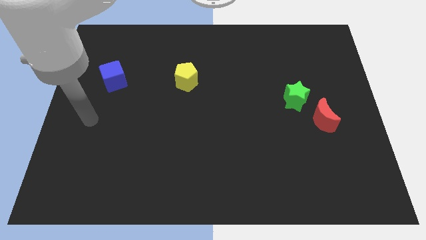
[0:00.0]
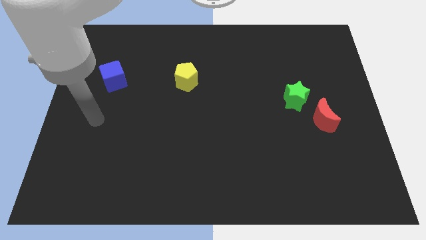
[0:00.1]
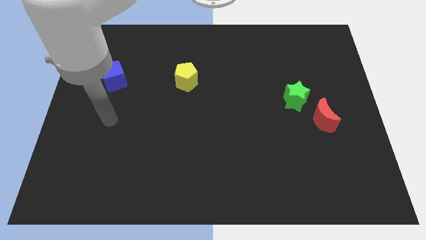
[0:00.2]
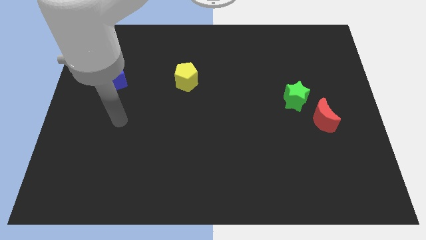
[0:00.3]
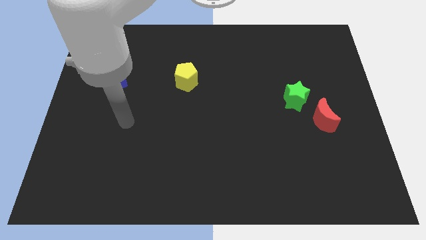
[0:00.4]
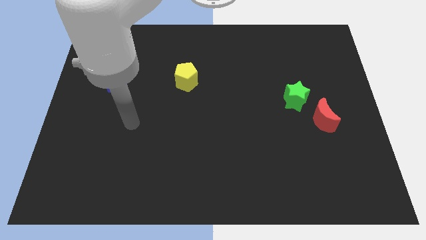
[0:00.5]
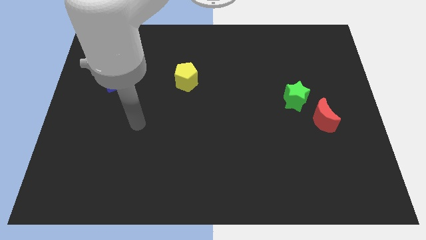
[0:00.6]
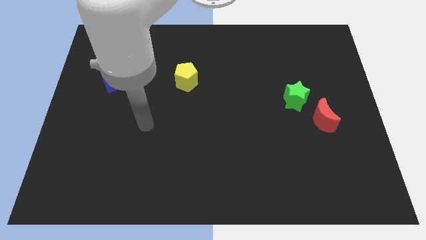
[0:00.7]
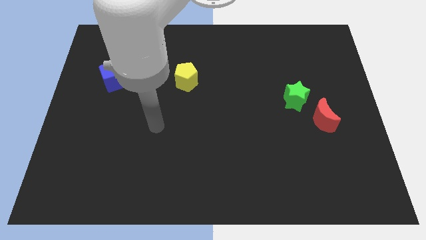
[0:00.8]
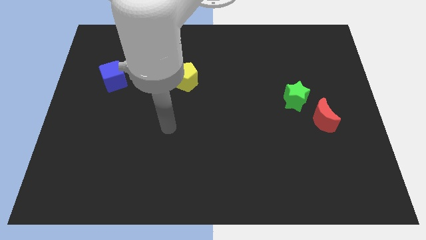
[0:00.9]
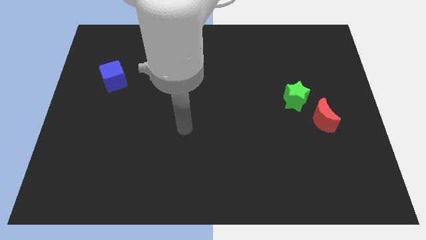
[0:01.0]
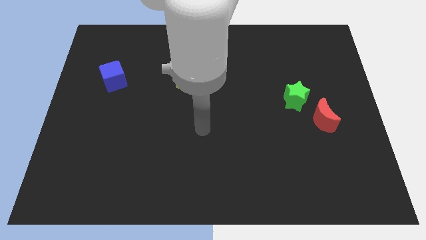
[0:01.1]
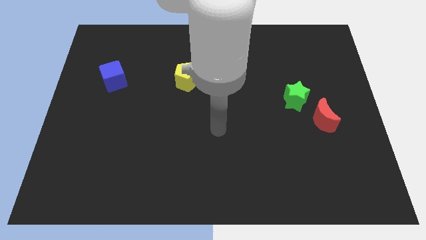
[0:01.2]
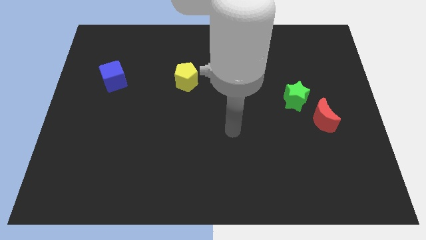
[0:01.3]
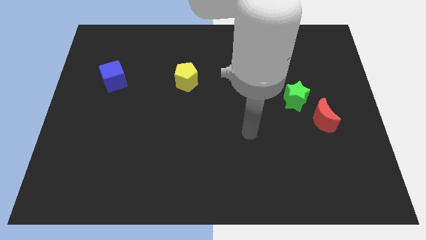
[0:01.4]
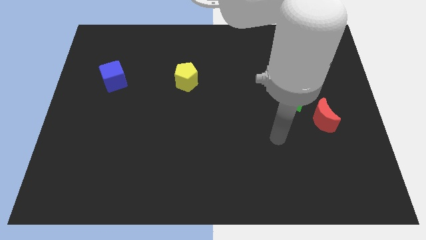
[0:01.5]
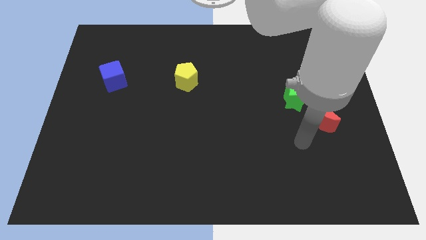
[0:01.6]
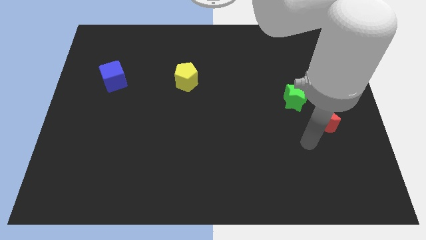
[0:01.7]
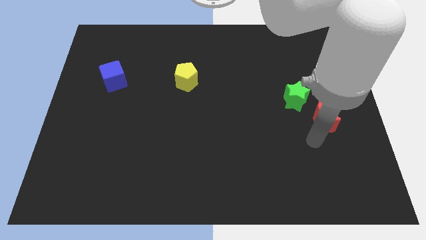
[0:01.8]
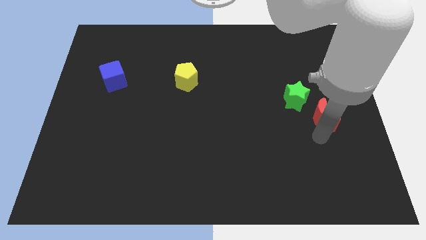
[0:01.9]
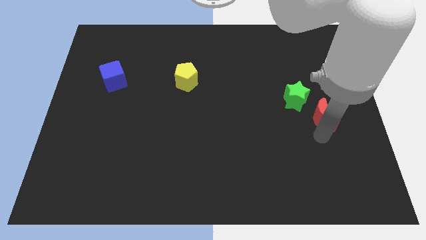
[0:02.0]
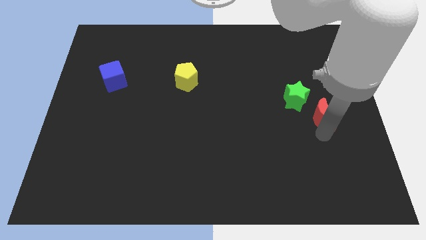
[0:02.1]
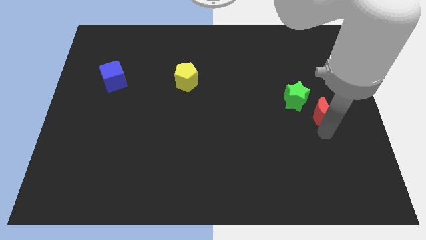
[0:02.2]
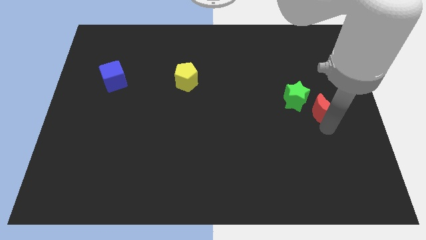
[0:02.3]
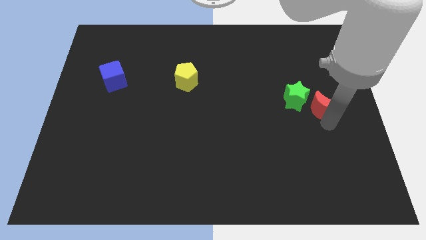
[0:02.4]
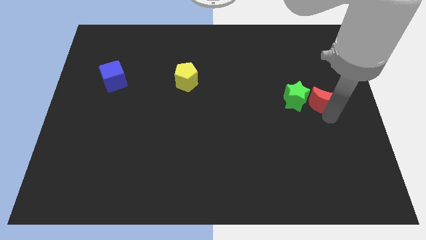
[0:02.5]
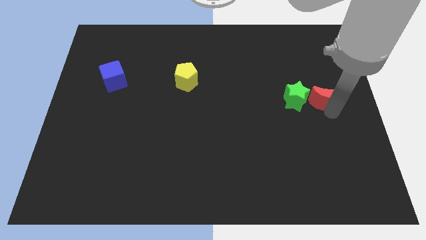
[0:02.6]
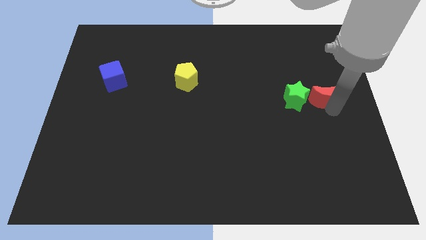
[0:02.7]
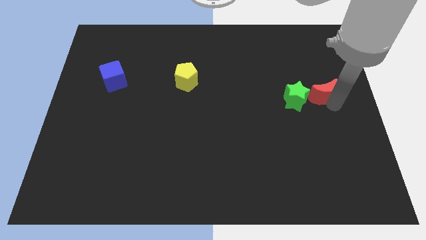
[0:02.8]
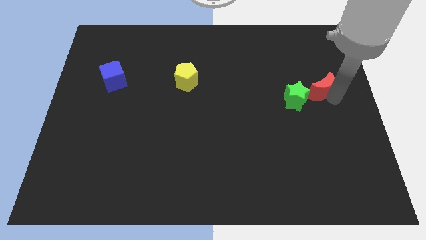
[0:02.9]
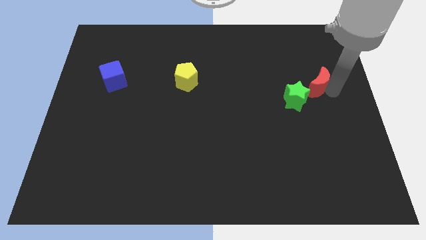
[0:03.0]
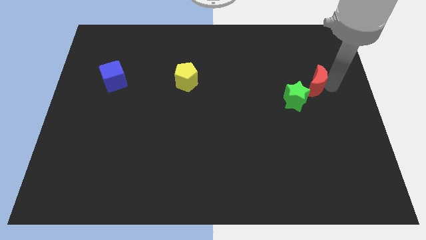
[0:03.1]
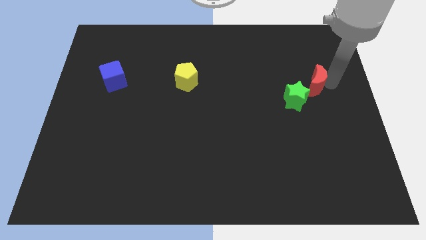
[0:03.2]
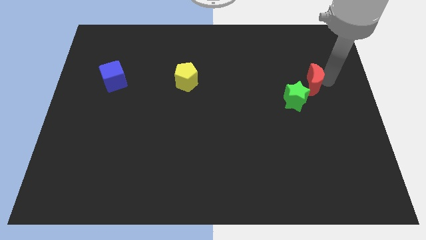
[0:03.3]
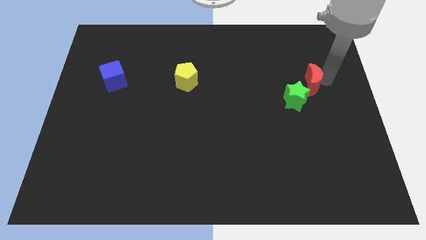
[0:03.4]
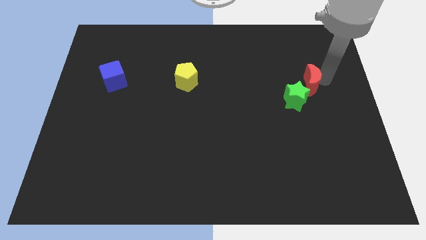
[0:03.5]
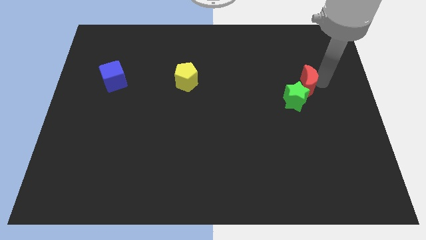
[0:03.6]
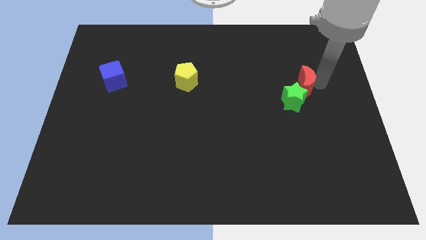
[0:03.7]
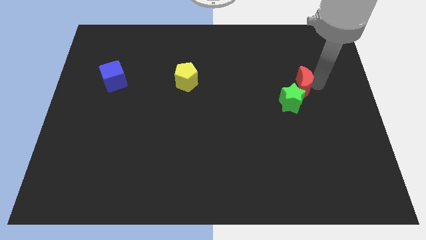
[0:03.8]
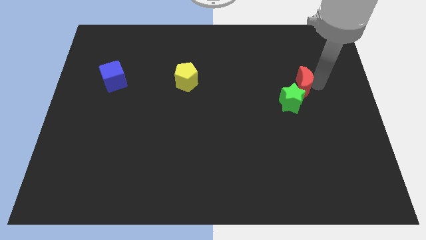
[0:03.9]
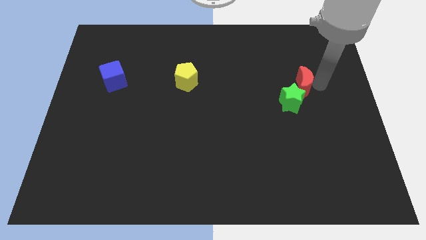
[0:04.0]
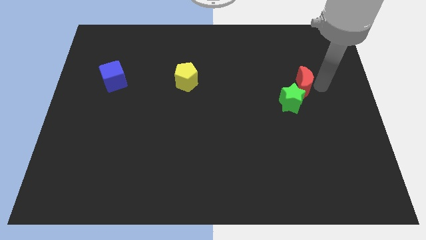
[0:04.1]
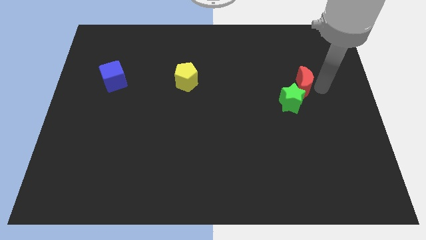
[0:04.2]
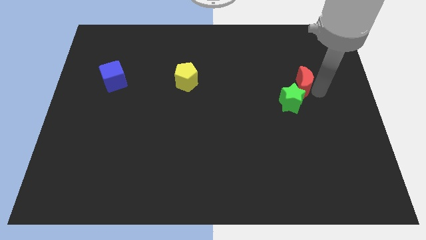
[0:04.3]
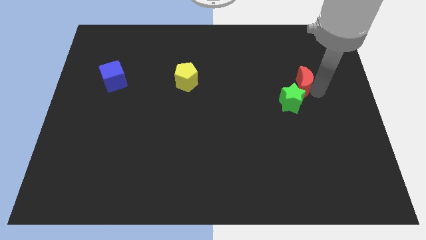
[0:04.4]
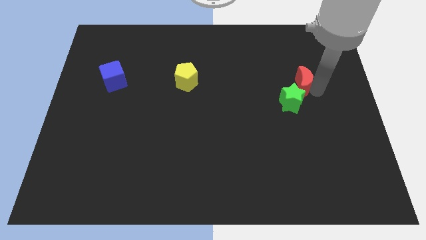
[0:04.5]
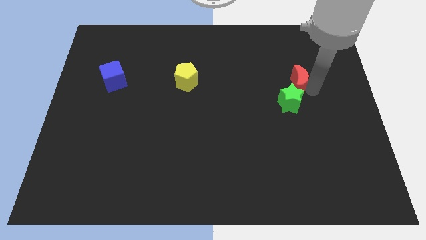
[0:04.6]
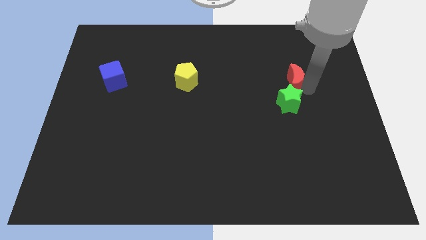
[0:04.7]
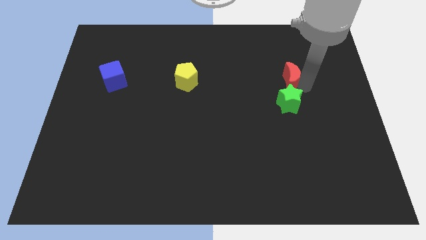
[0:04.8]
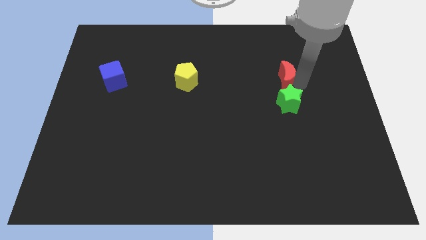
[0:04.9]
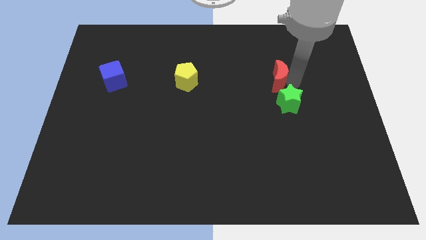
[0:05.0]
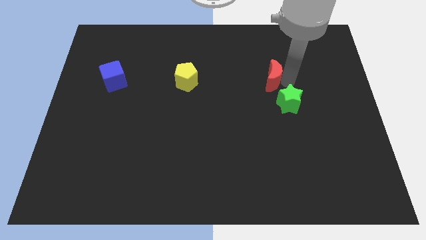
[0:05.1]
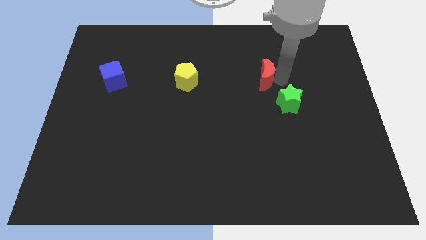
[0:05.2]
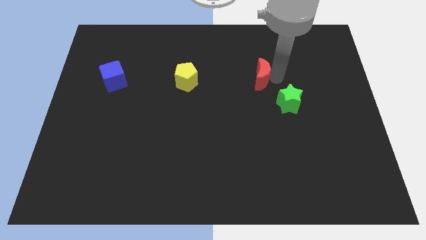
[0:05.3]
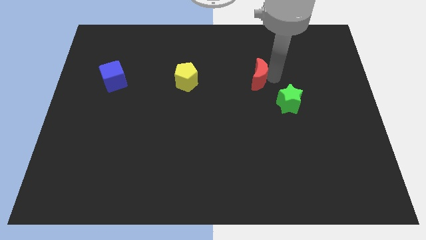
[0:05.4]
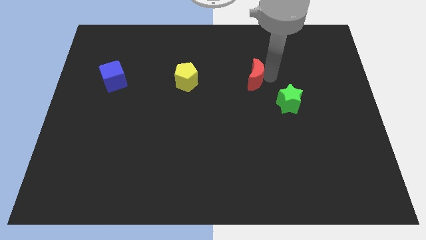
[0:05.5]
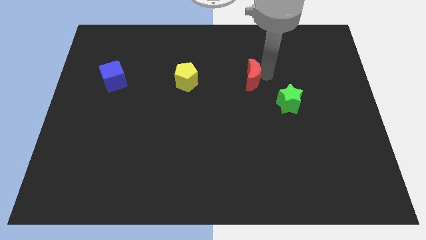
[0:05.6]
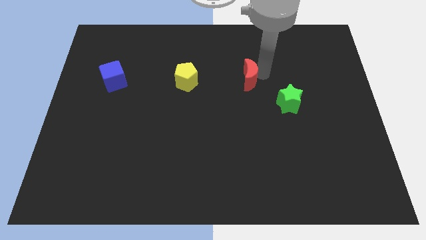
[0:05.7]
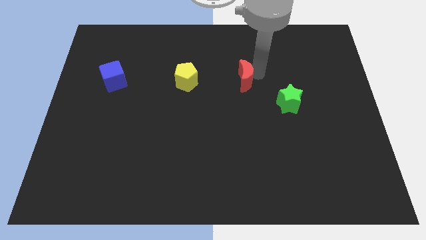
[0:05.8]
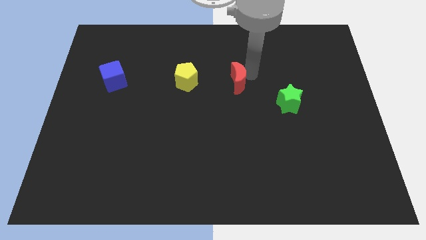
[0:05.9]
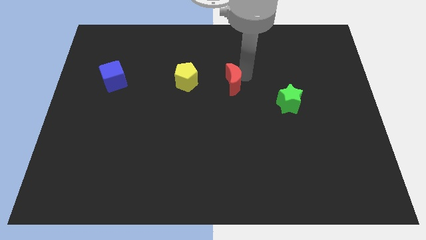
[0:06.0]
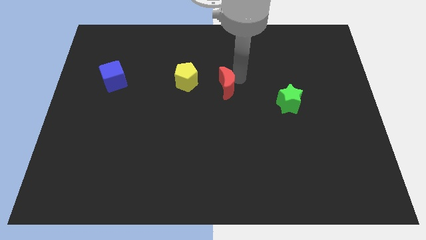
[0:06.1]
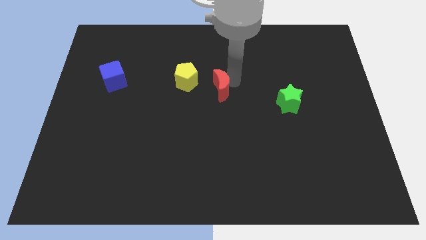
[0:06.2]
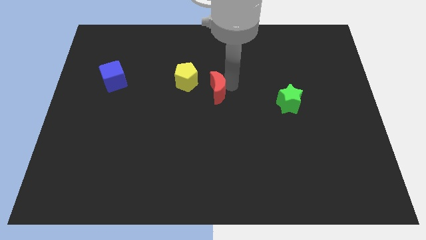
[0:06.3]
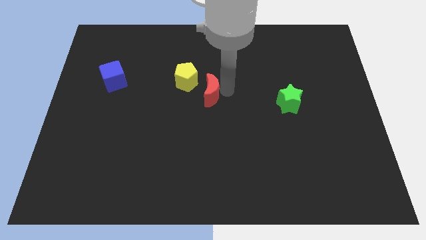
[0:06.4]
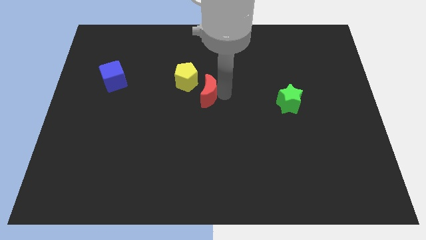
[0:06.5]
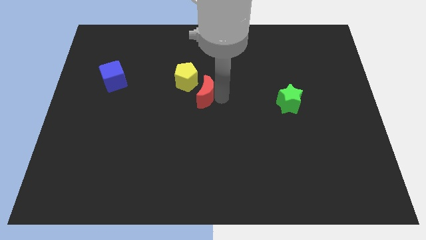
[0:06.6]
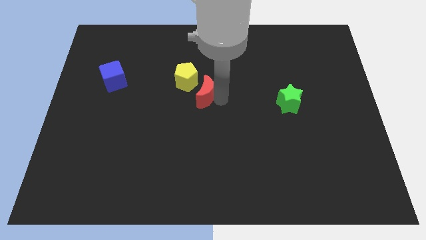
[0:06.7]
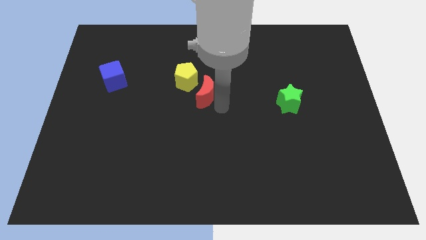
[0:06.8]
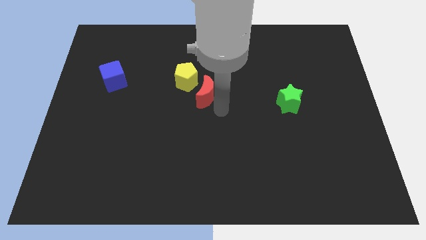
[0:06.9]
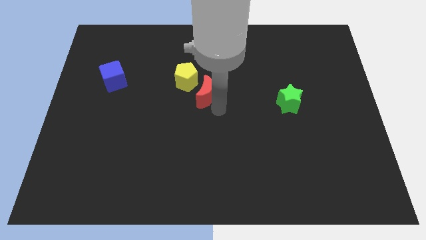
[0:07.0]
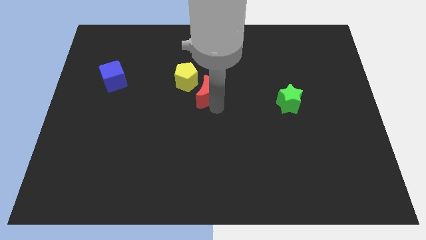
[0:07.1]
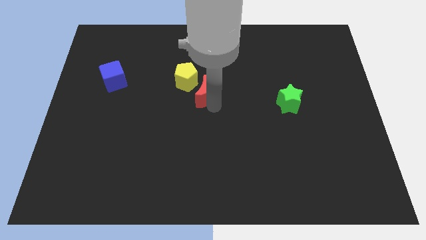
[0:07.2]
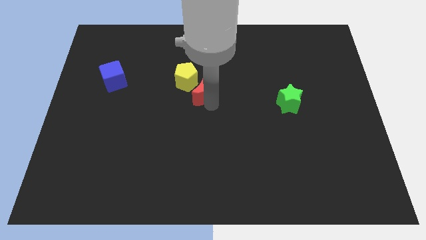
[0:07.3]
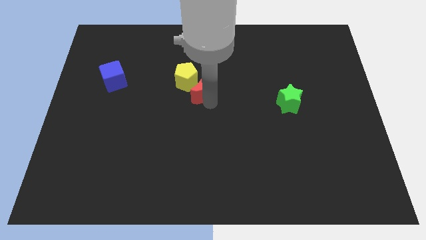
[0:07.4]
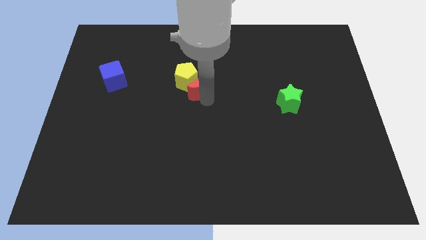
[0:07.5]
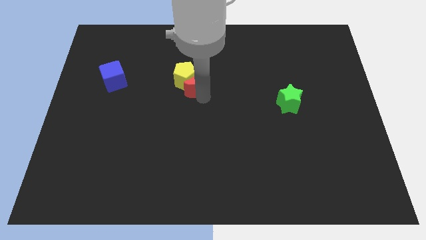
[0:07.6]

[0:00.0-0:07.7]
push the red moon next to the yellow pentagon
